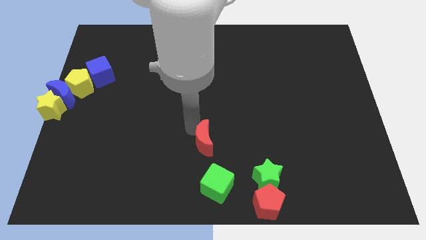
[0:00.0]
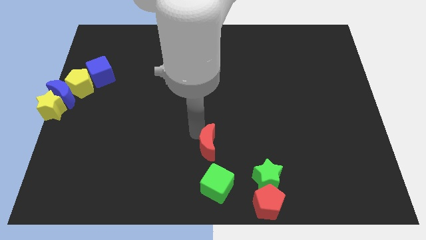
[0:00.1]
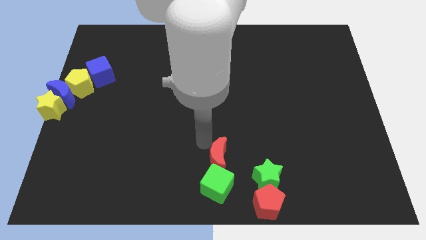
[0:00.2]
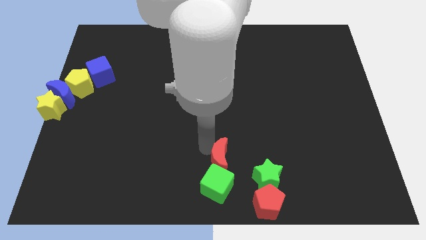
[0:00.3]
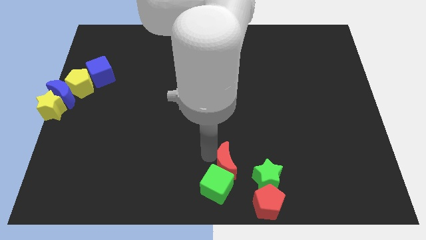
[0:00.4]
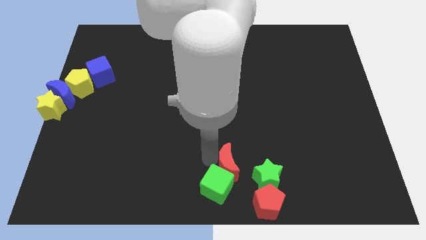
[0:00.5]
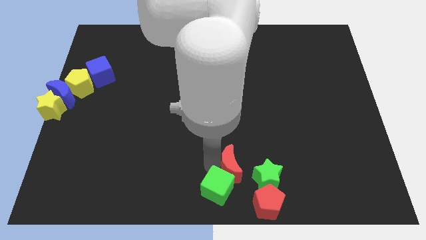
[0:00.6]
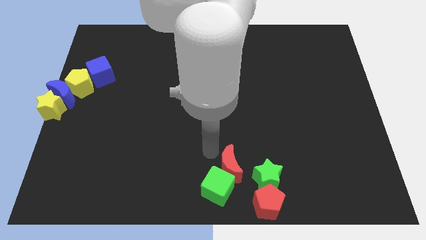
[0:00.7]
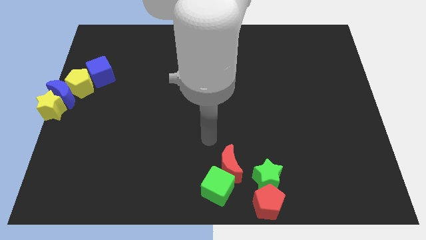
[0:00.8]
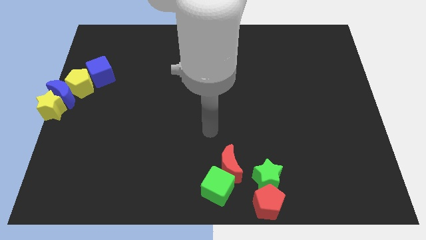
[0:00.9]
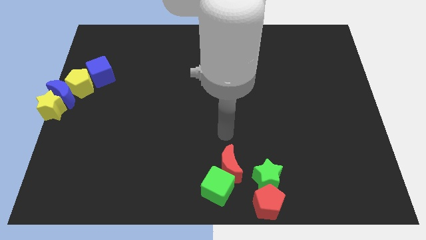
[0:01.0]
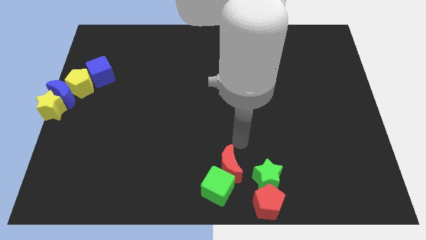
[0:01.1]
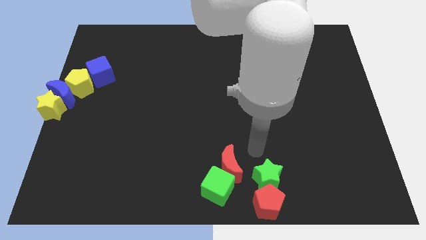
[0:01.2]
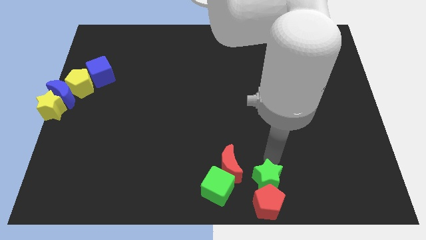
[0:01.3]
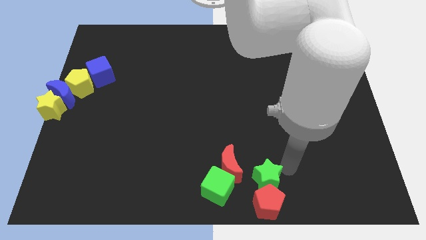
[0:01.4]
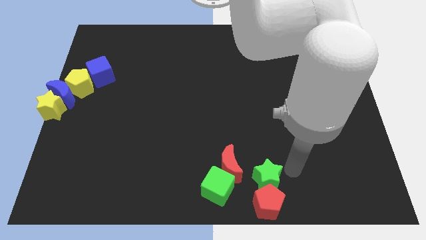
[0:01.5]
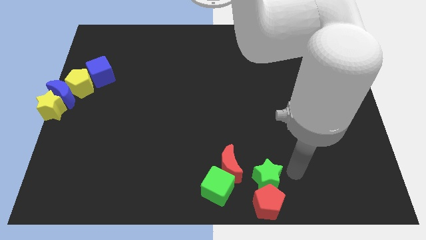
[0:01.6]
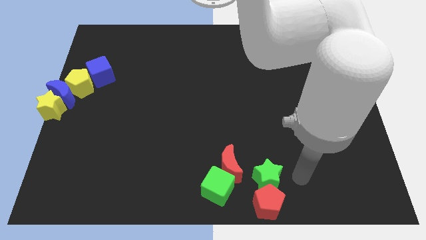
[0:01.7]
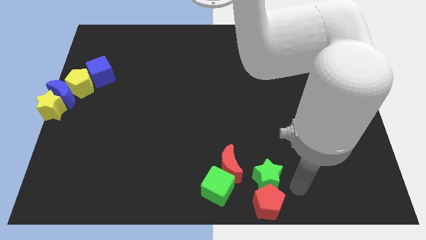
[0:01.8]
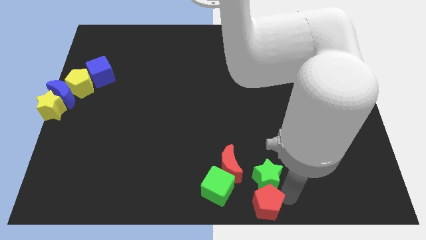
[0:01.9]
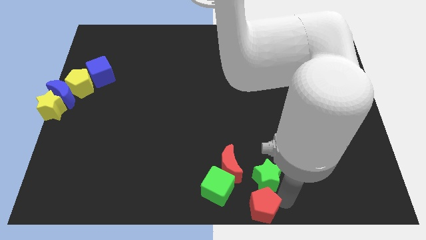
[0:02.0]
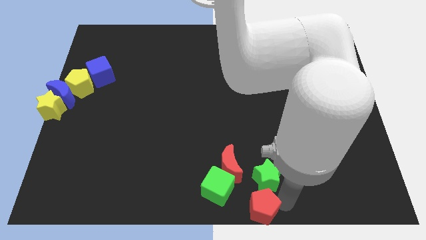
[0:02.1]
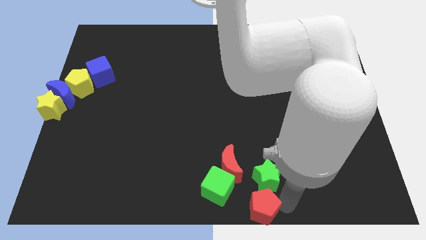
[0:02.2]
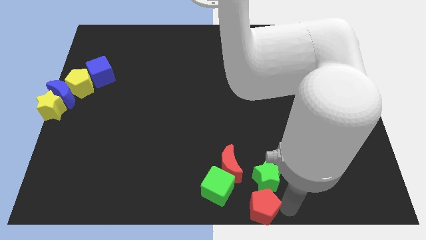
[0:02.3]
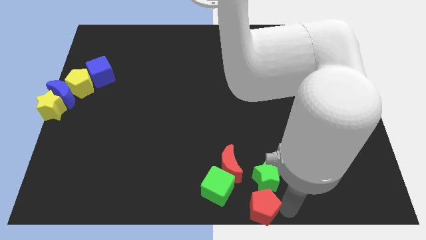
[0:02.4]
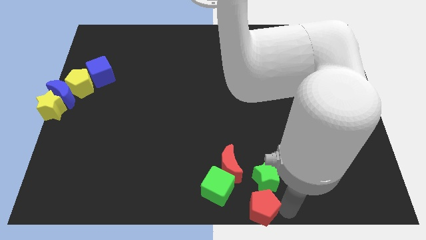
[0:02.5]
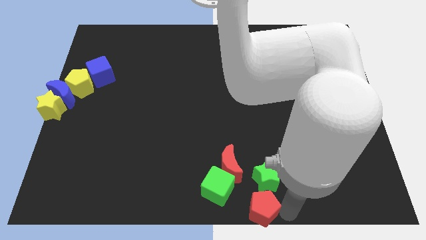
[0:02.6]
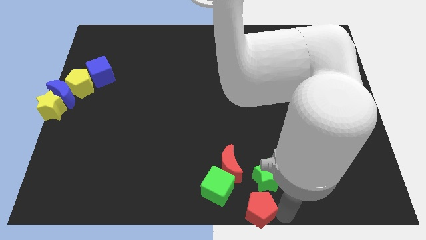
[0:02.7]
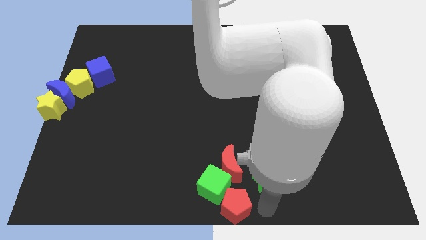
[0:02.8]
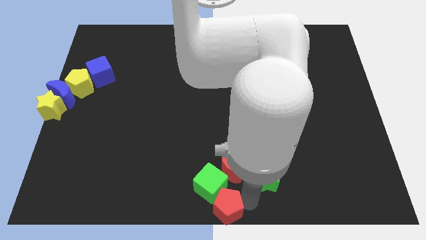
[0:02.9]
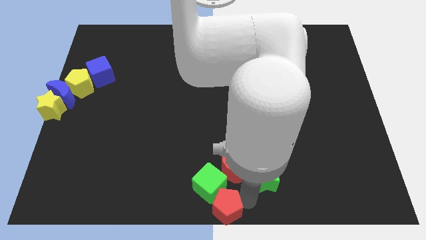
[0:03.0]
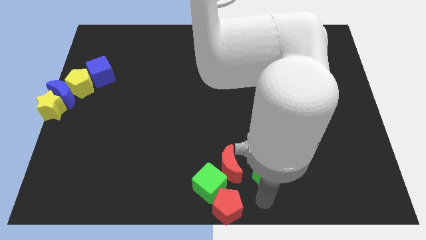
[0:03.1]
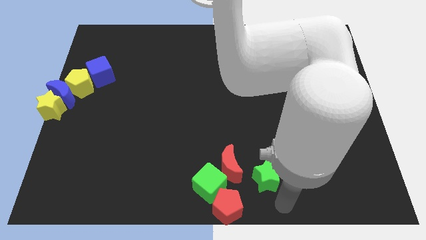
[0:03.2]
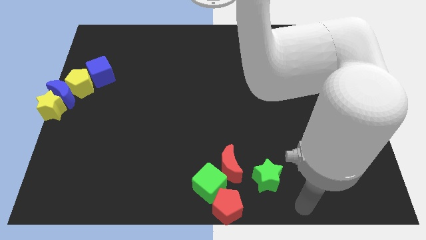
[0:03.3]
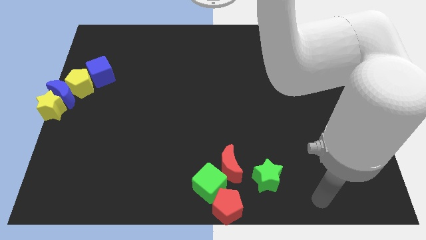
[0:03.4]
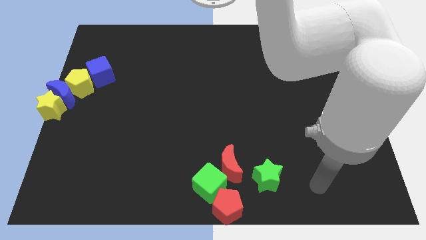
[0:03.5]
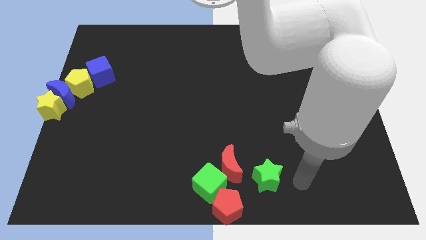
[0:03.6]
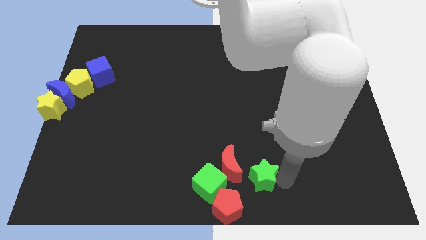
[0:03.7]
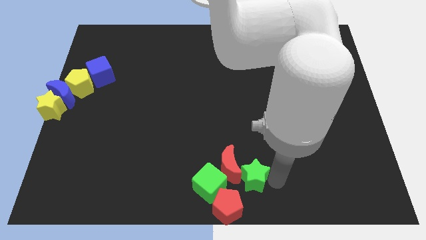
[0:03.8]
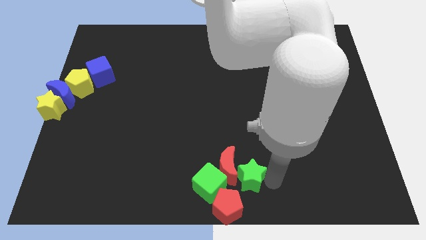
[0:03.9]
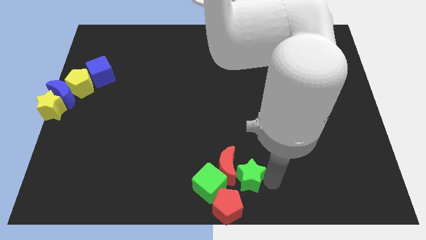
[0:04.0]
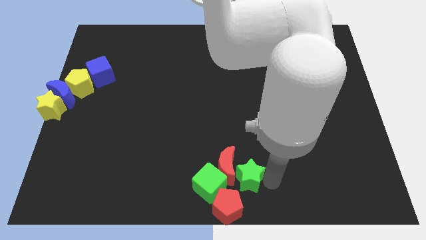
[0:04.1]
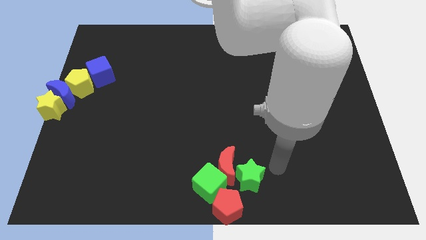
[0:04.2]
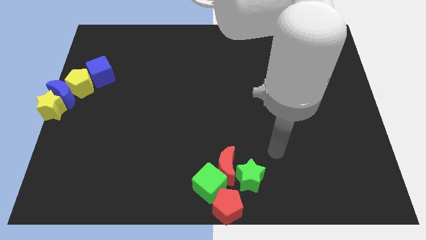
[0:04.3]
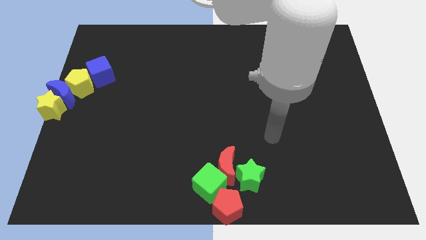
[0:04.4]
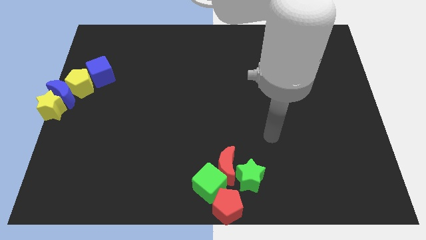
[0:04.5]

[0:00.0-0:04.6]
slightly push the green blocks and red blocks to the bottom center of the board

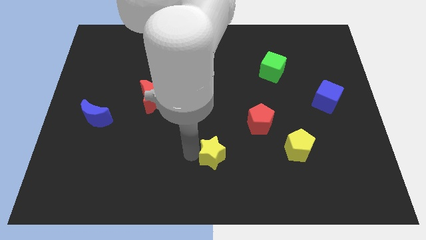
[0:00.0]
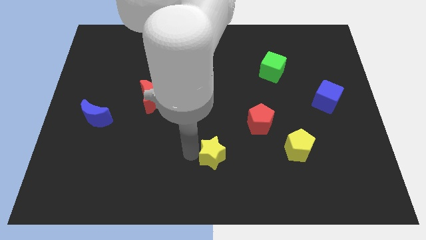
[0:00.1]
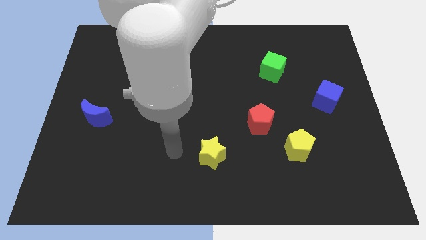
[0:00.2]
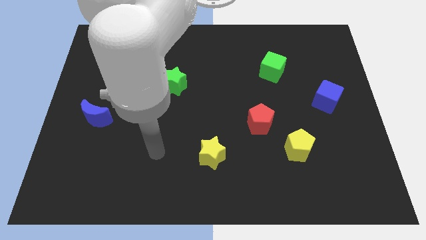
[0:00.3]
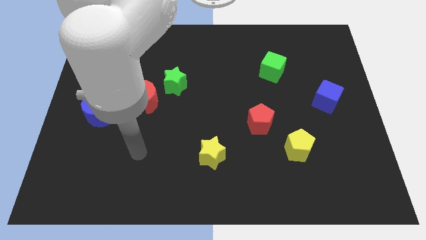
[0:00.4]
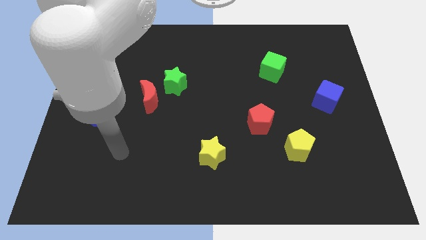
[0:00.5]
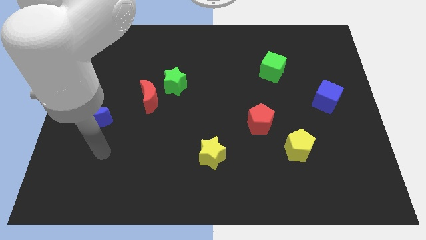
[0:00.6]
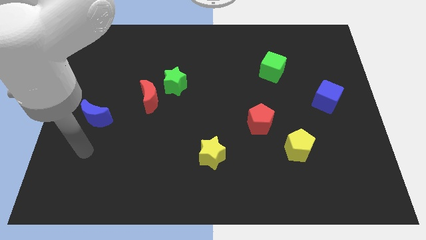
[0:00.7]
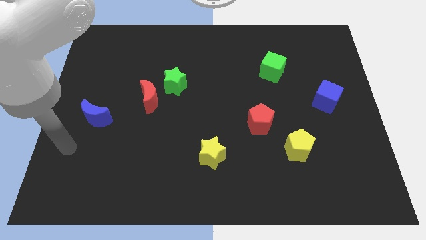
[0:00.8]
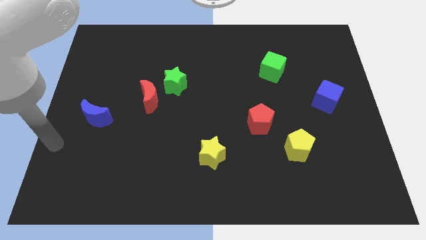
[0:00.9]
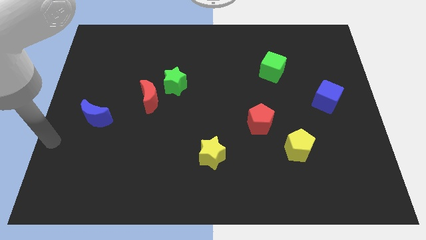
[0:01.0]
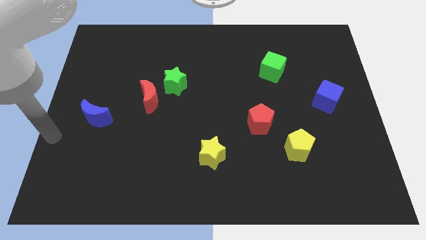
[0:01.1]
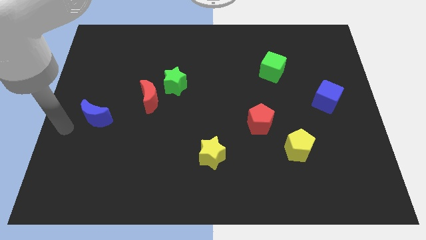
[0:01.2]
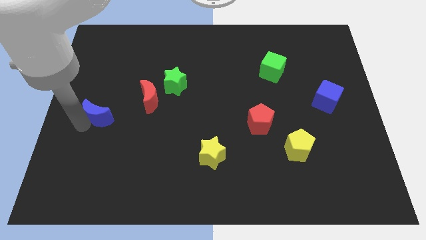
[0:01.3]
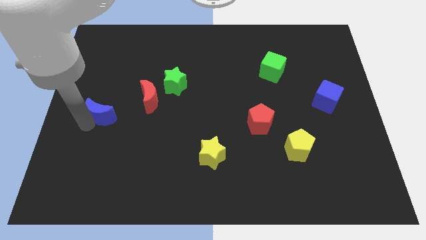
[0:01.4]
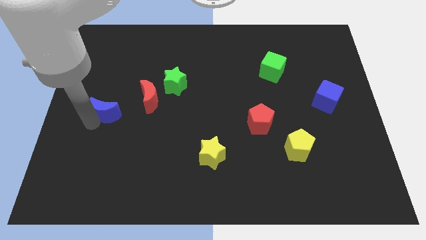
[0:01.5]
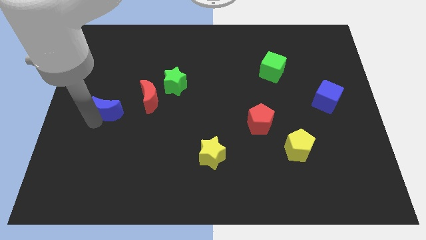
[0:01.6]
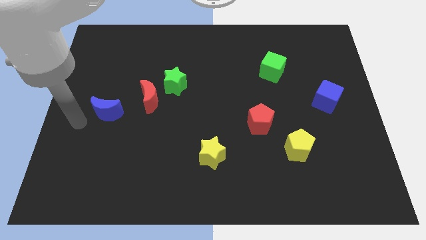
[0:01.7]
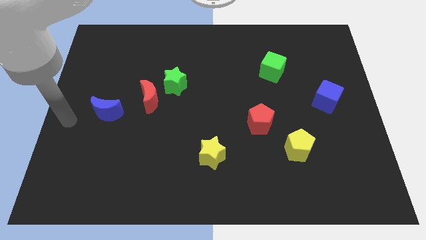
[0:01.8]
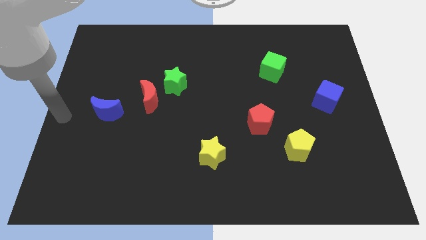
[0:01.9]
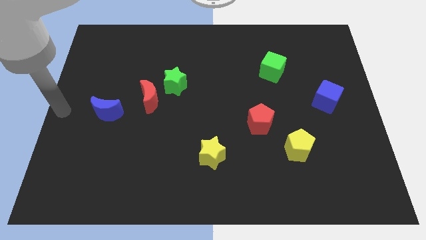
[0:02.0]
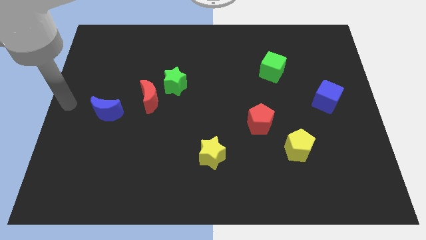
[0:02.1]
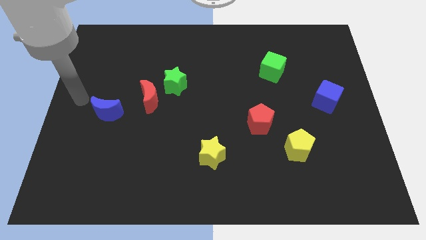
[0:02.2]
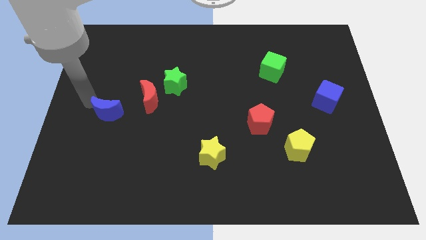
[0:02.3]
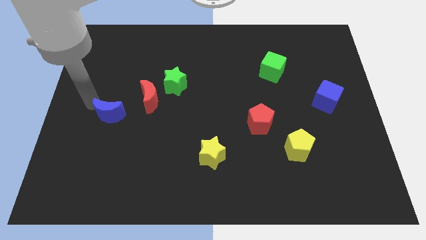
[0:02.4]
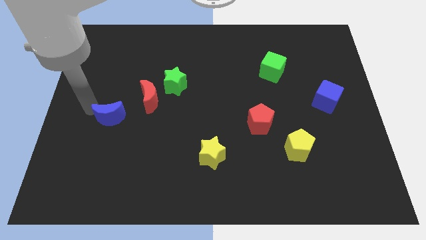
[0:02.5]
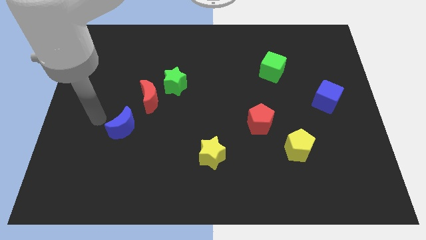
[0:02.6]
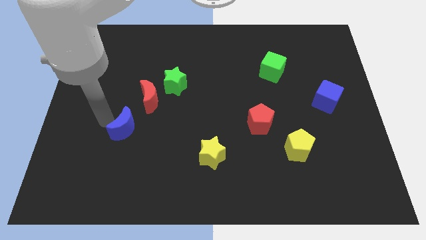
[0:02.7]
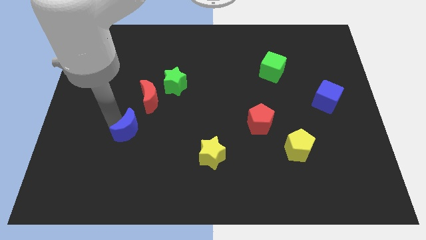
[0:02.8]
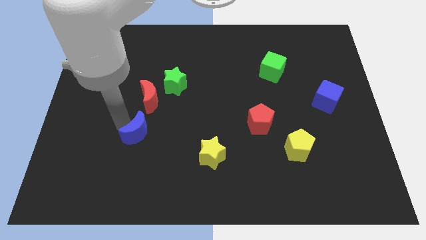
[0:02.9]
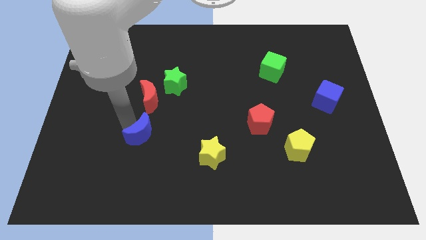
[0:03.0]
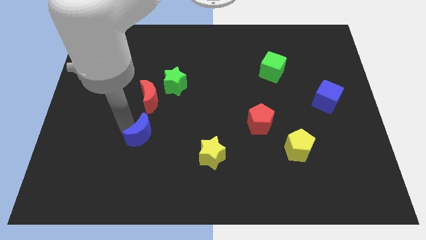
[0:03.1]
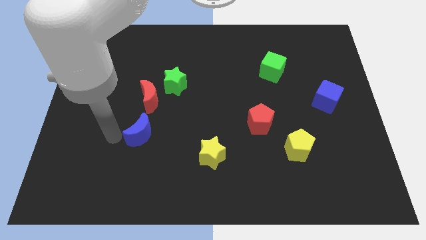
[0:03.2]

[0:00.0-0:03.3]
slightly move the blue crescent towards the right

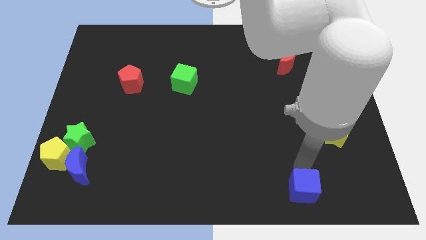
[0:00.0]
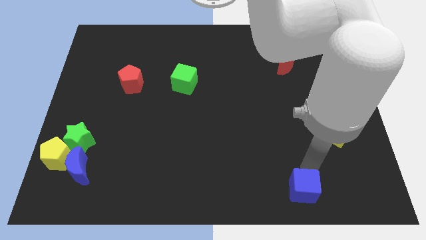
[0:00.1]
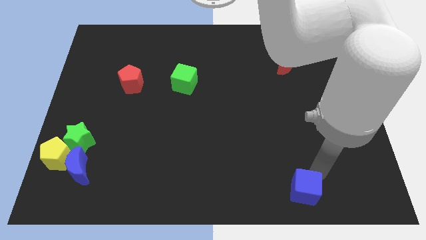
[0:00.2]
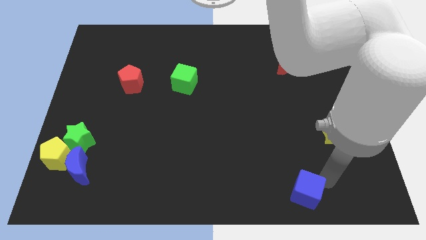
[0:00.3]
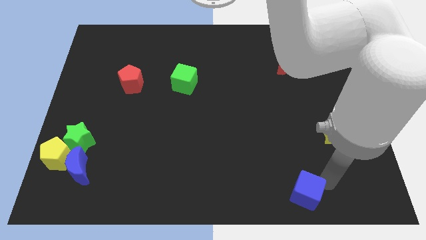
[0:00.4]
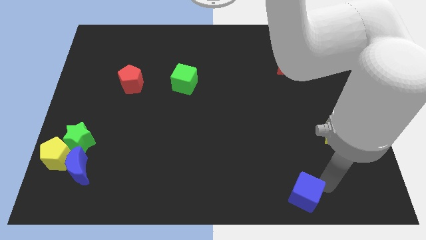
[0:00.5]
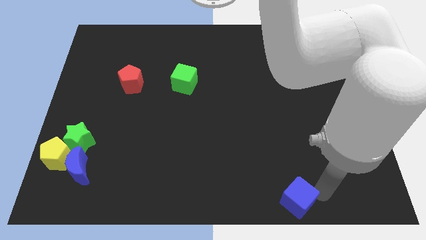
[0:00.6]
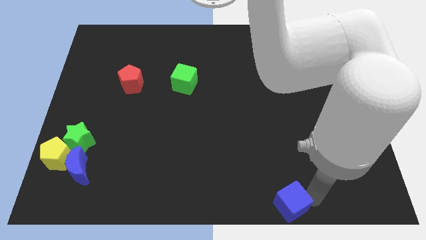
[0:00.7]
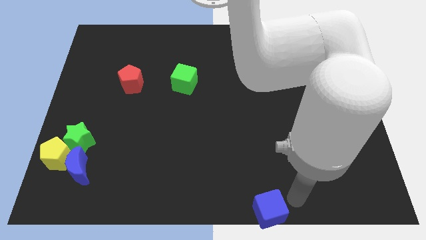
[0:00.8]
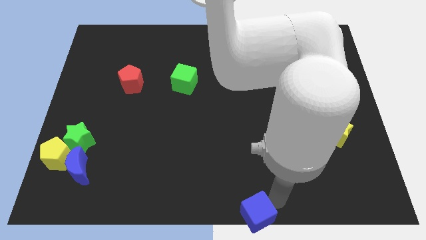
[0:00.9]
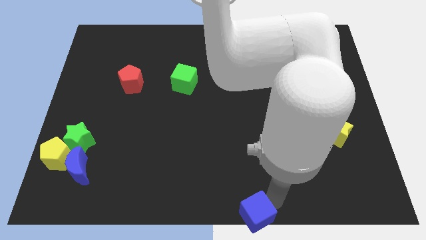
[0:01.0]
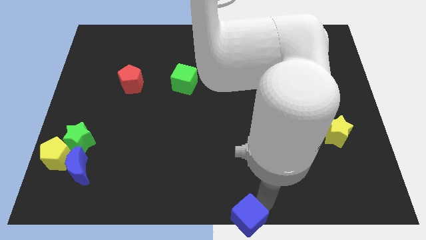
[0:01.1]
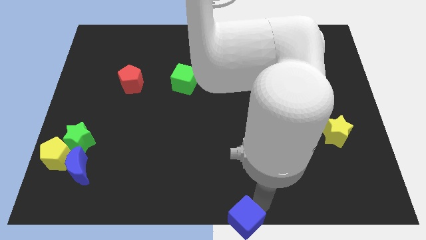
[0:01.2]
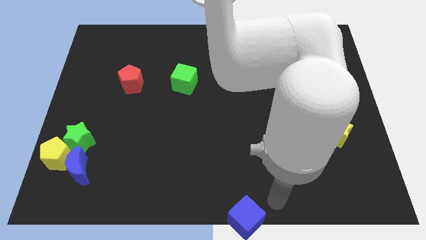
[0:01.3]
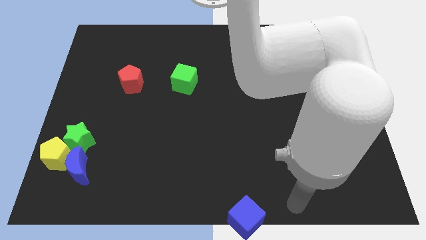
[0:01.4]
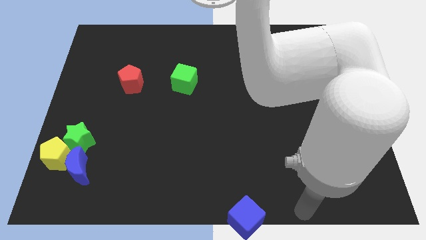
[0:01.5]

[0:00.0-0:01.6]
move the blue cube to the bottom center of the board
